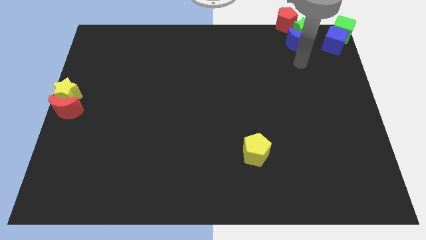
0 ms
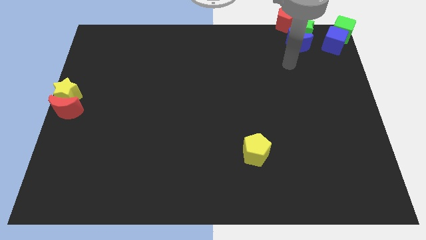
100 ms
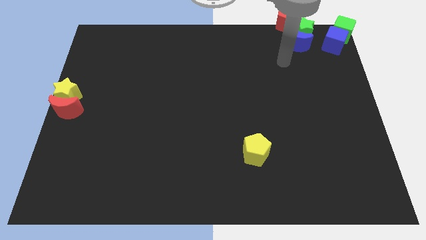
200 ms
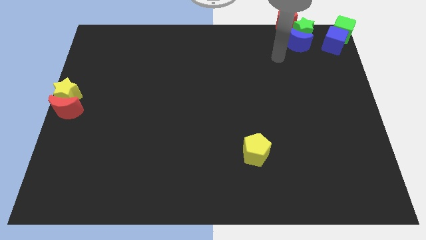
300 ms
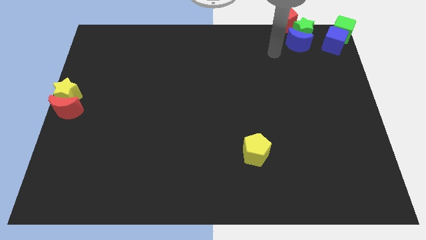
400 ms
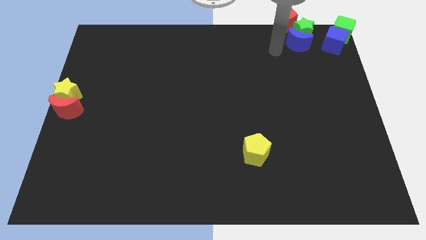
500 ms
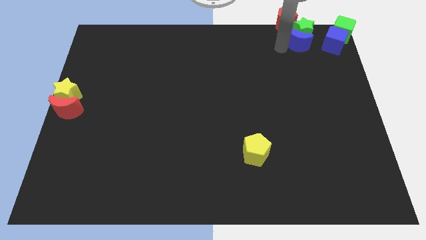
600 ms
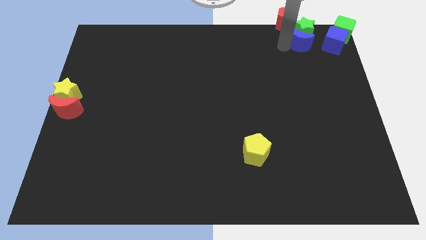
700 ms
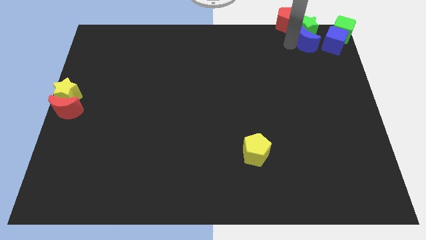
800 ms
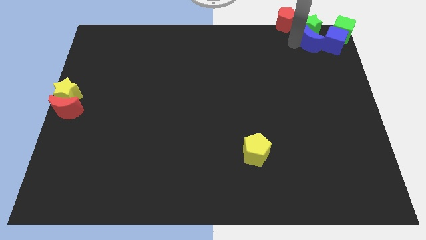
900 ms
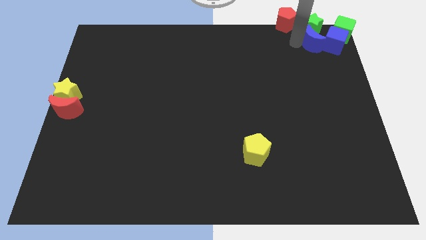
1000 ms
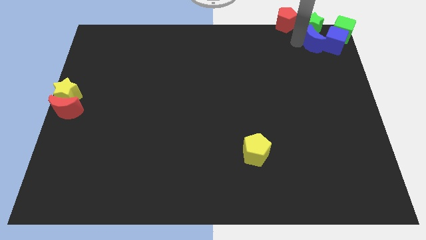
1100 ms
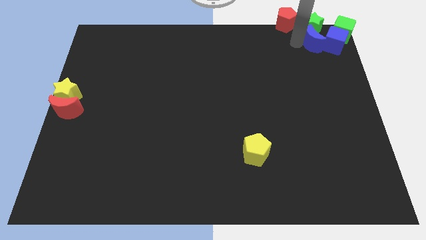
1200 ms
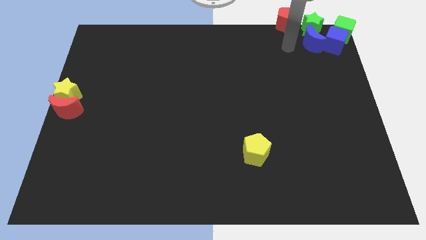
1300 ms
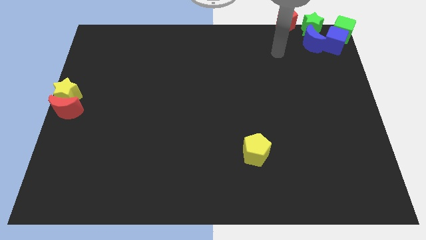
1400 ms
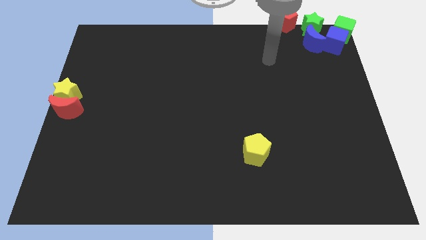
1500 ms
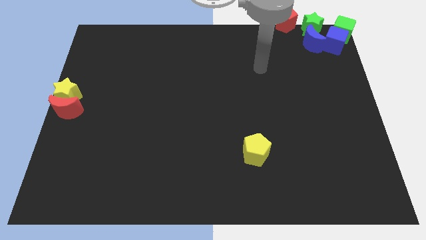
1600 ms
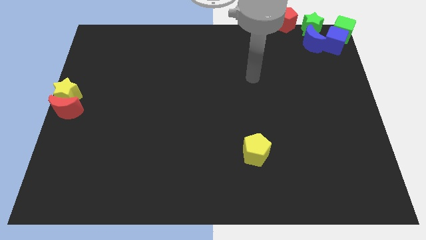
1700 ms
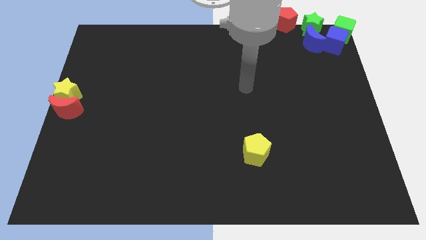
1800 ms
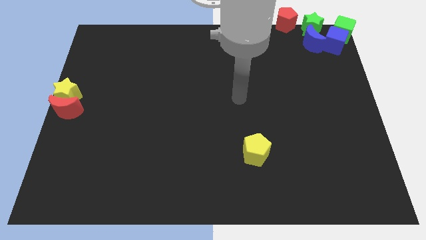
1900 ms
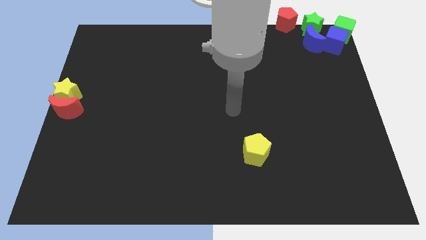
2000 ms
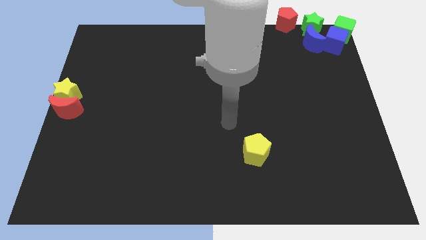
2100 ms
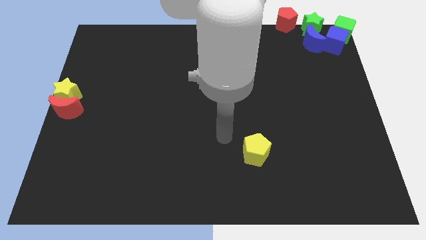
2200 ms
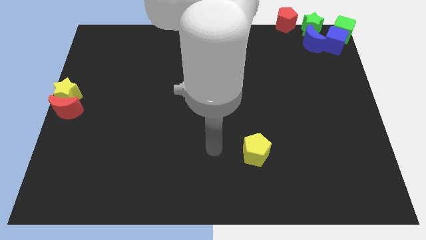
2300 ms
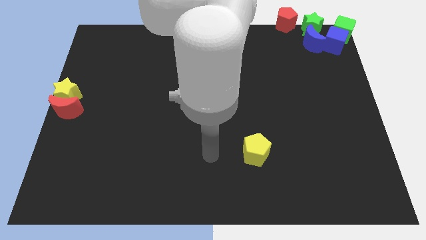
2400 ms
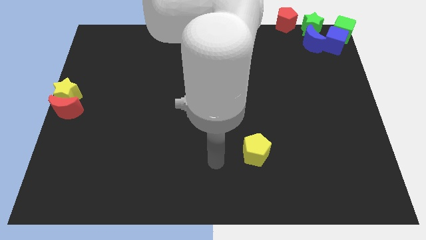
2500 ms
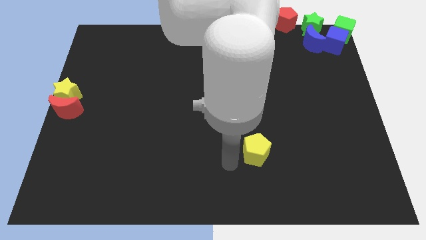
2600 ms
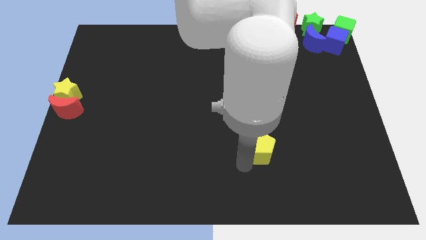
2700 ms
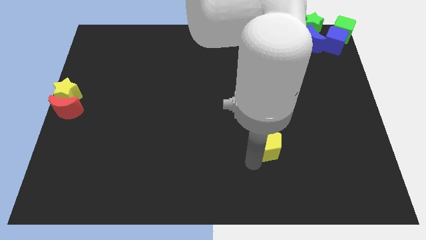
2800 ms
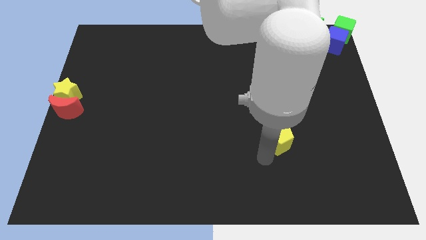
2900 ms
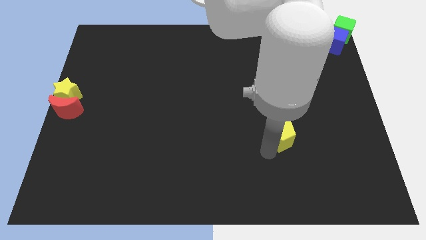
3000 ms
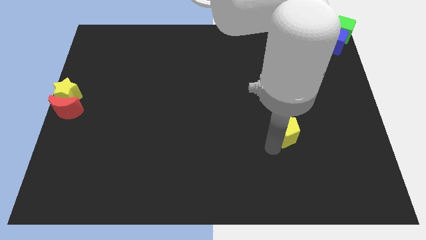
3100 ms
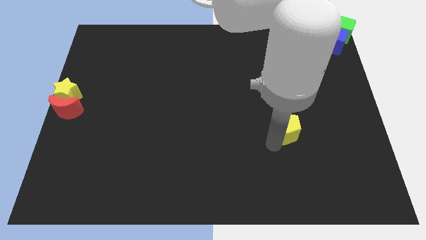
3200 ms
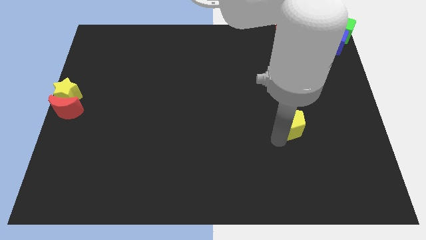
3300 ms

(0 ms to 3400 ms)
slightly push the blue crescent and green star towards the top right side of the board

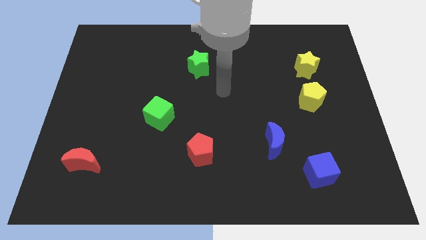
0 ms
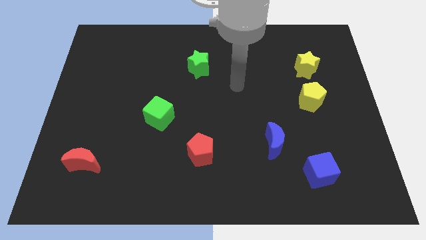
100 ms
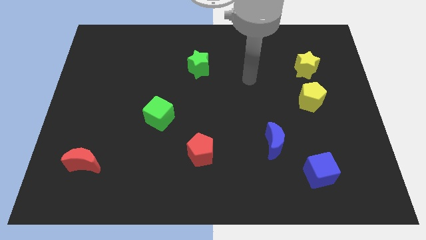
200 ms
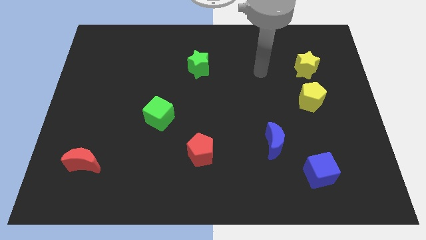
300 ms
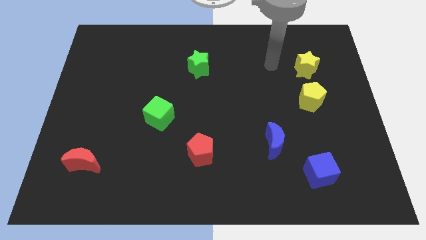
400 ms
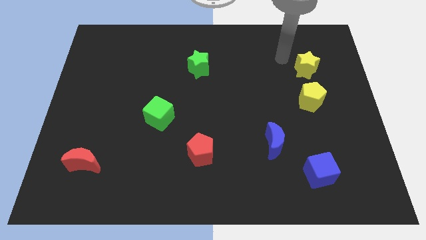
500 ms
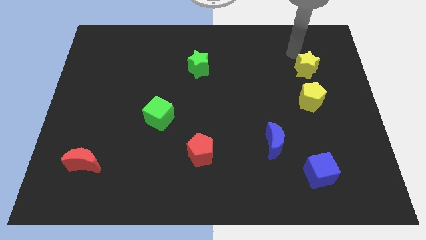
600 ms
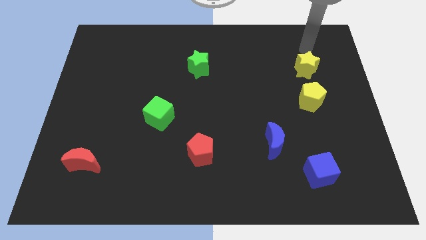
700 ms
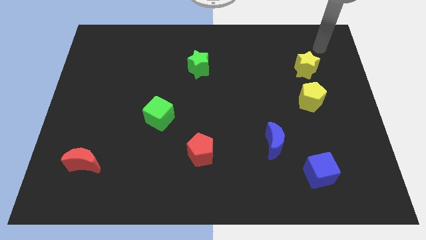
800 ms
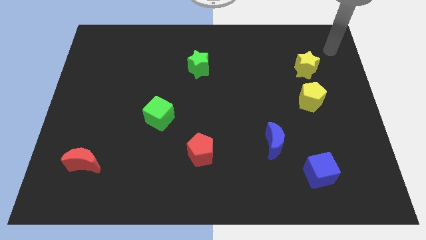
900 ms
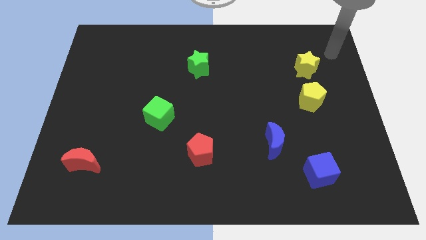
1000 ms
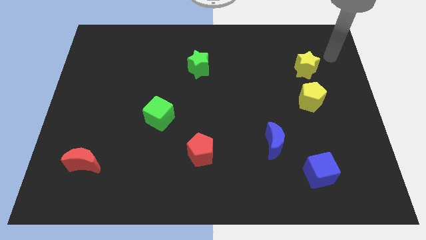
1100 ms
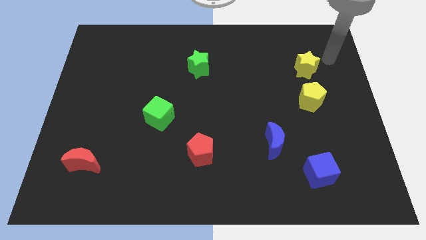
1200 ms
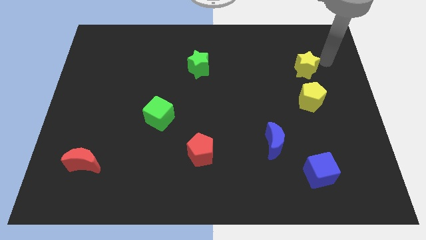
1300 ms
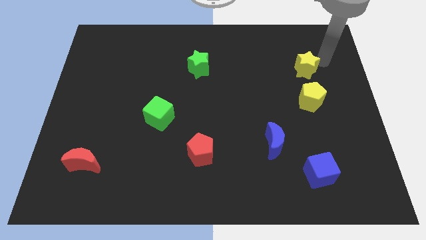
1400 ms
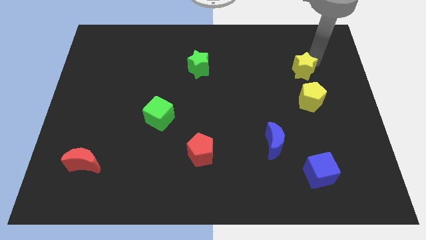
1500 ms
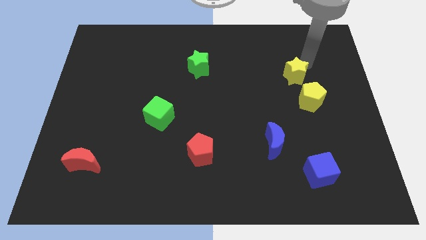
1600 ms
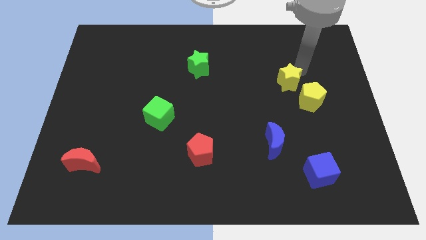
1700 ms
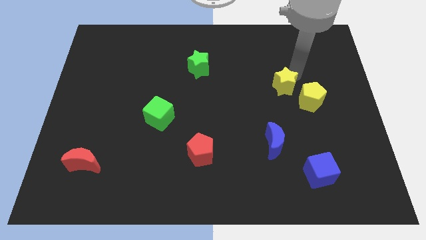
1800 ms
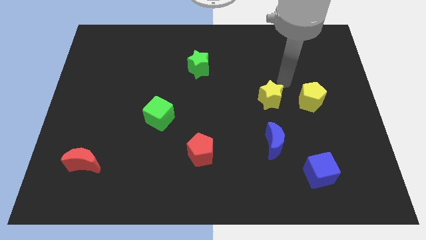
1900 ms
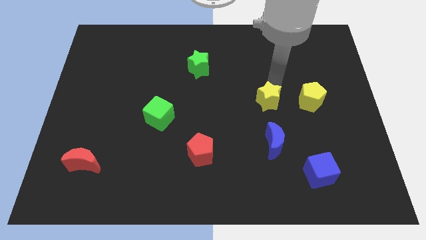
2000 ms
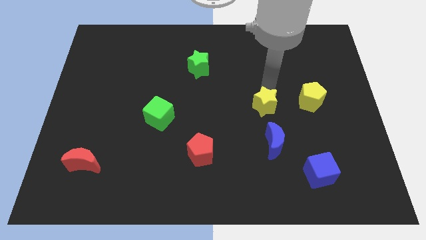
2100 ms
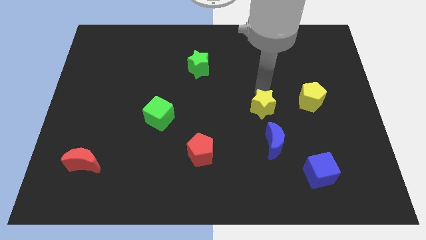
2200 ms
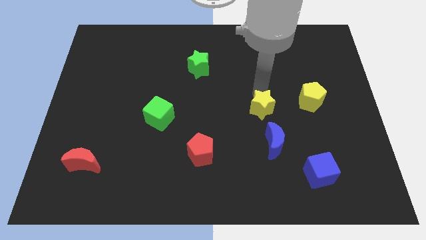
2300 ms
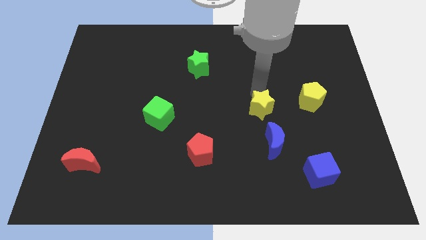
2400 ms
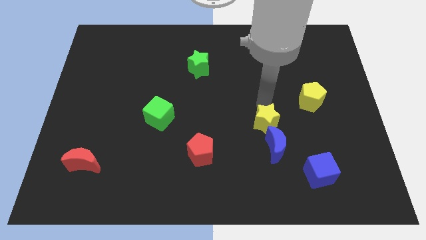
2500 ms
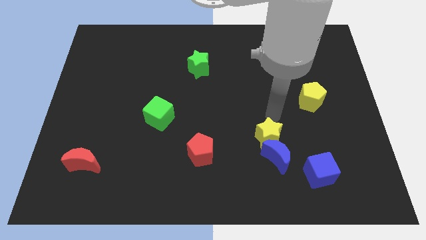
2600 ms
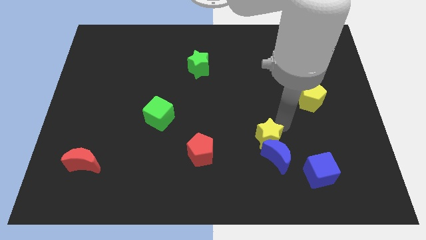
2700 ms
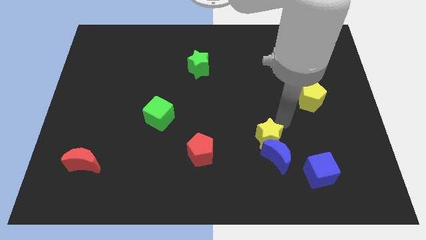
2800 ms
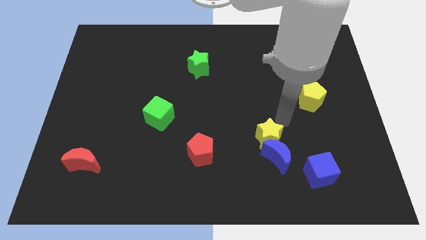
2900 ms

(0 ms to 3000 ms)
move yellow star above the blue moon

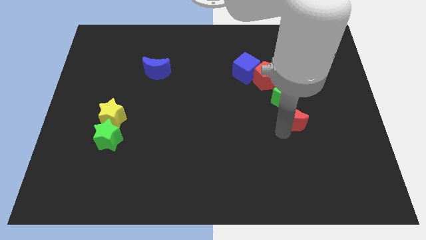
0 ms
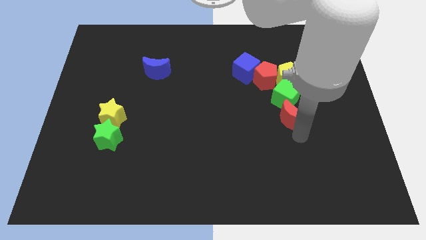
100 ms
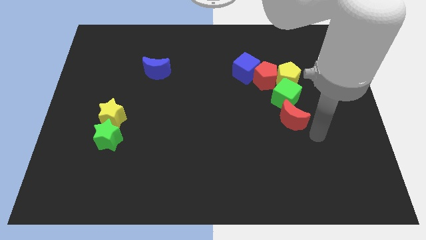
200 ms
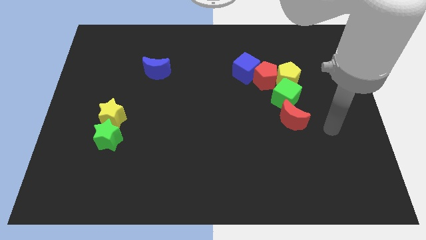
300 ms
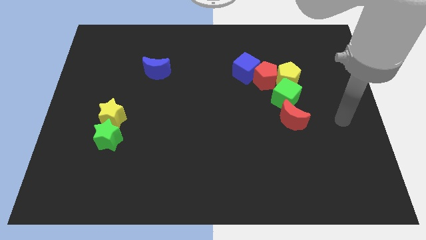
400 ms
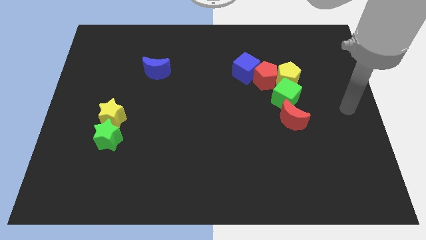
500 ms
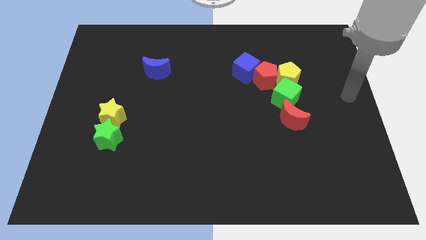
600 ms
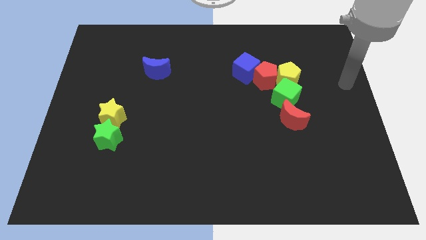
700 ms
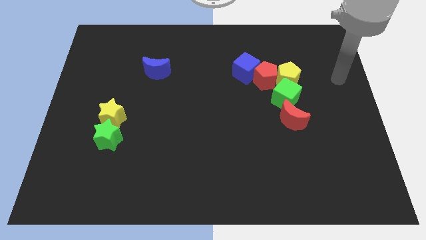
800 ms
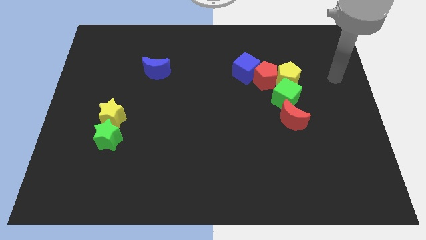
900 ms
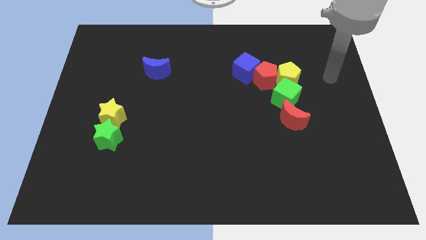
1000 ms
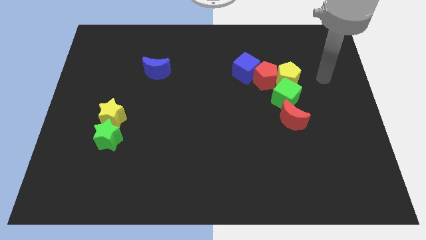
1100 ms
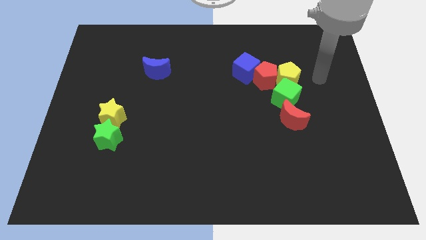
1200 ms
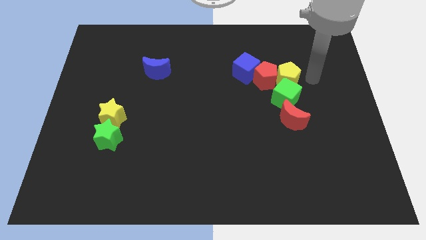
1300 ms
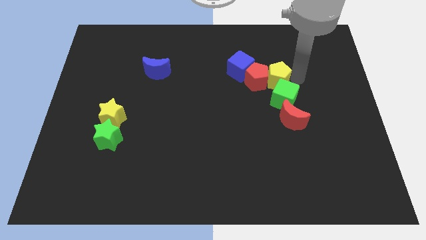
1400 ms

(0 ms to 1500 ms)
move your arm away from the red crescent

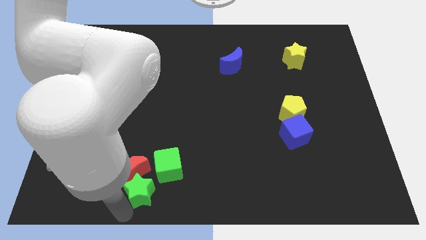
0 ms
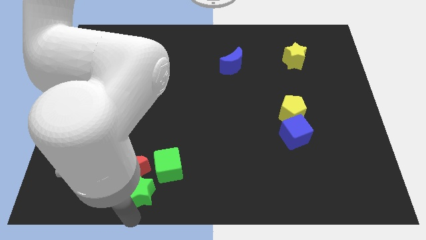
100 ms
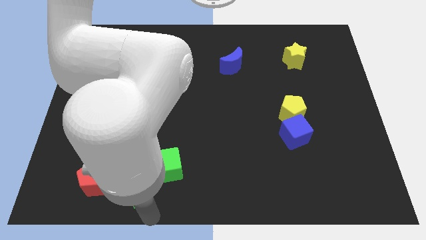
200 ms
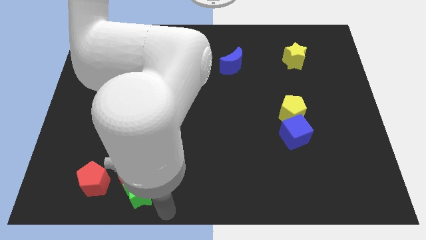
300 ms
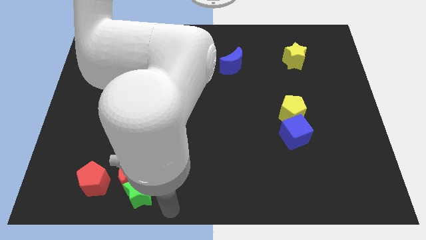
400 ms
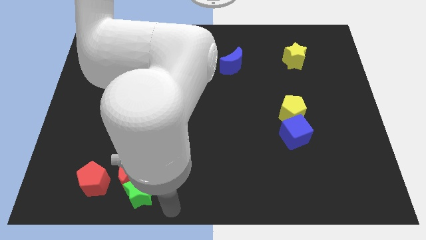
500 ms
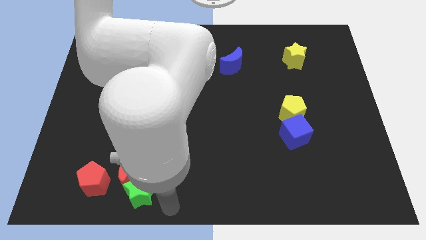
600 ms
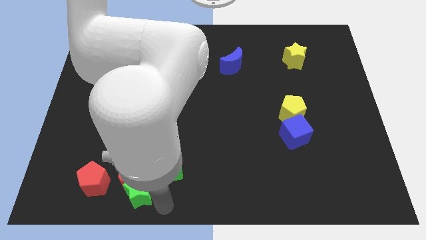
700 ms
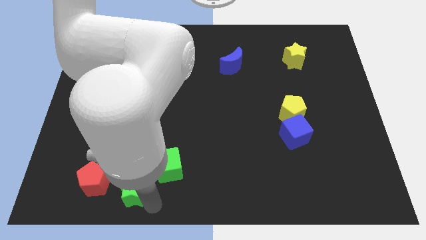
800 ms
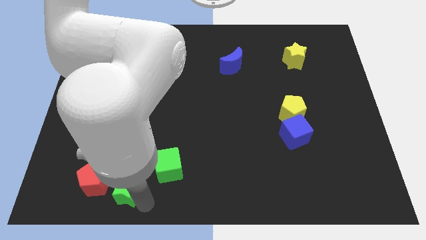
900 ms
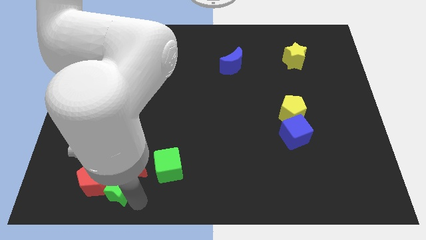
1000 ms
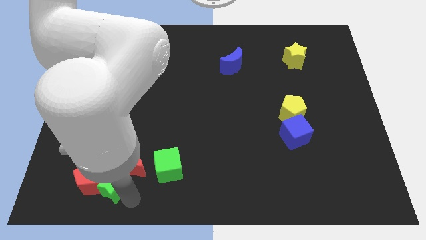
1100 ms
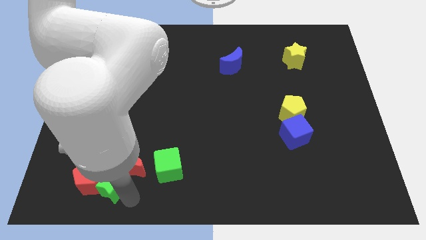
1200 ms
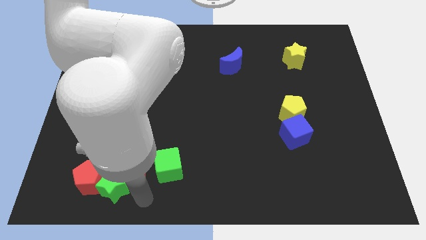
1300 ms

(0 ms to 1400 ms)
move the green star into the red pentagon
